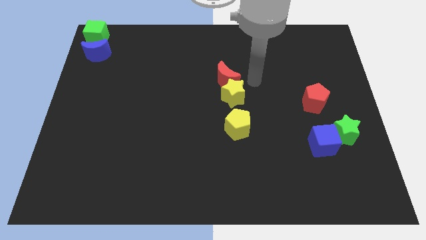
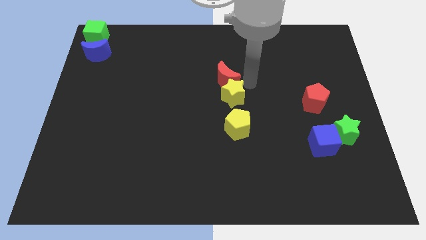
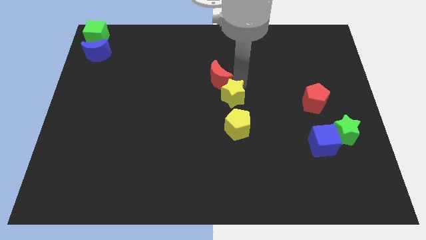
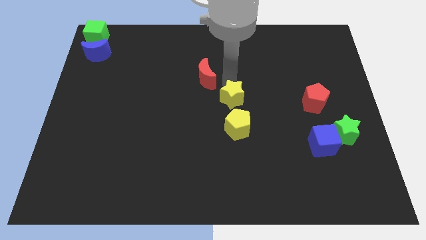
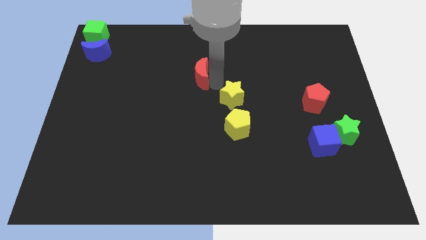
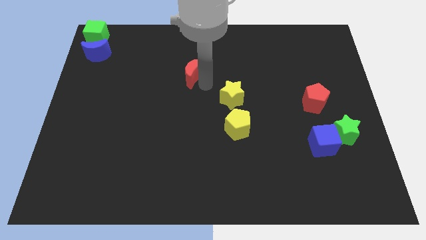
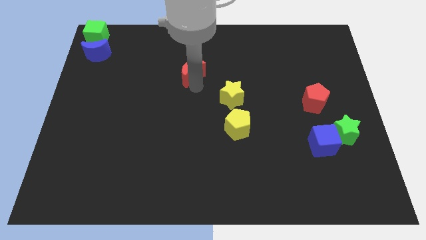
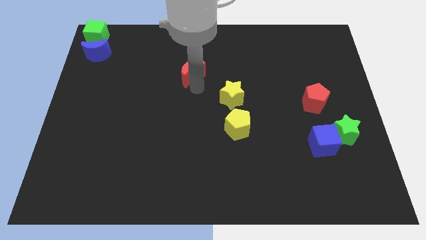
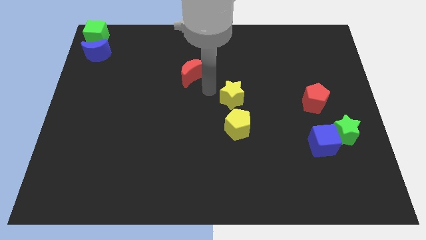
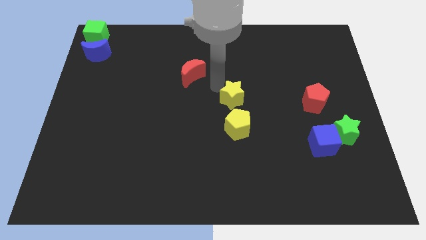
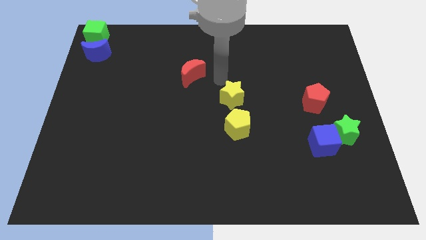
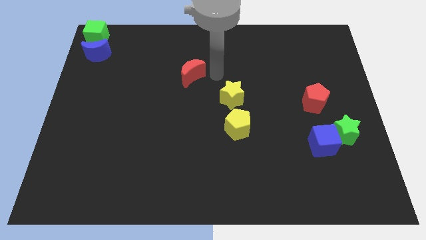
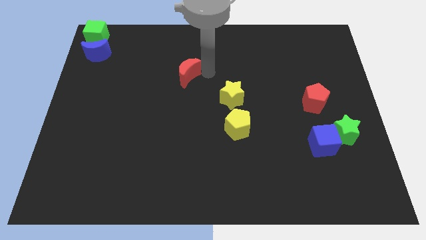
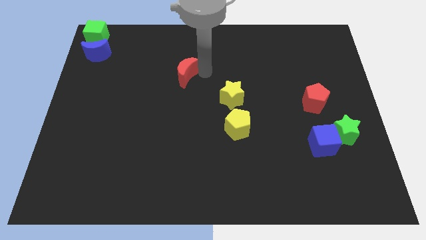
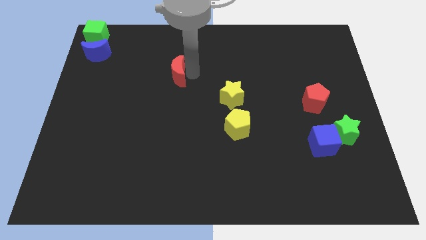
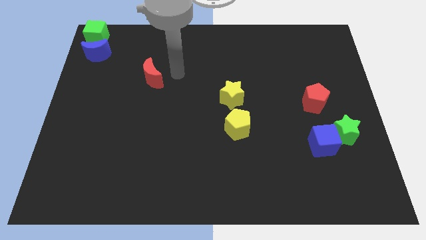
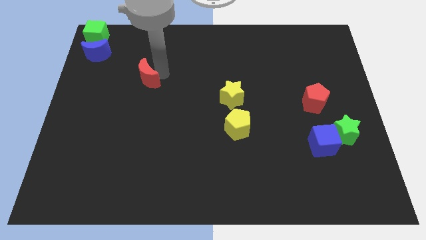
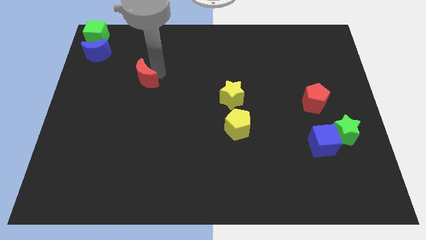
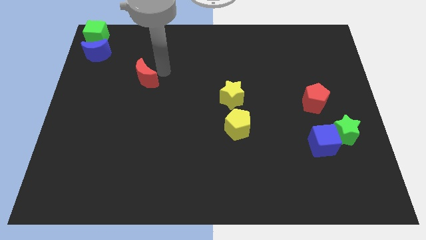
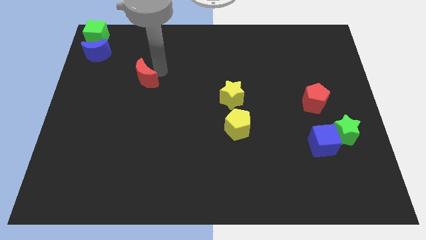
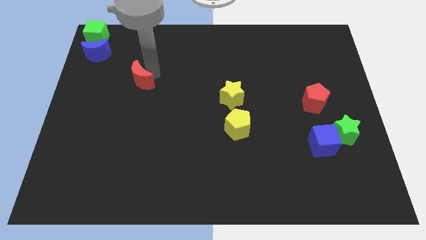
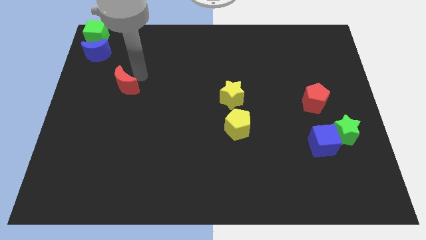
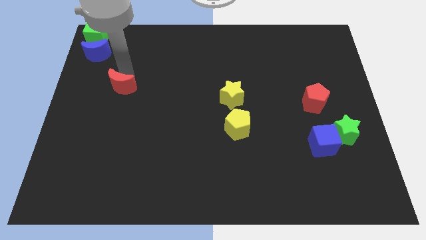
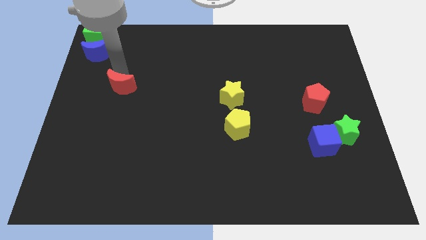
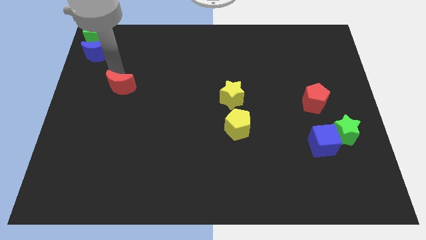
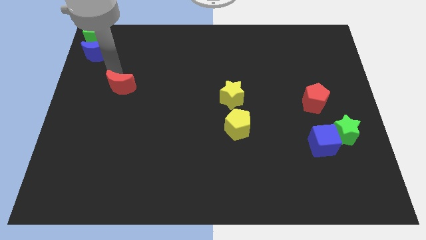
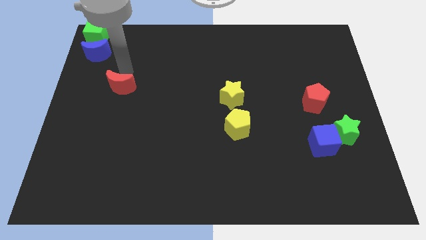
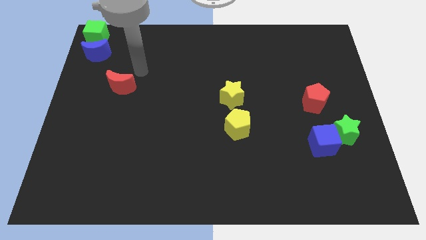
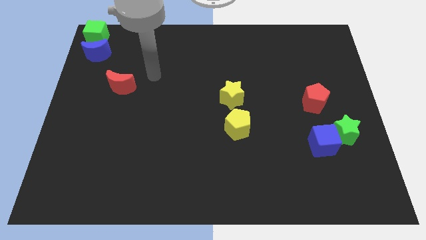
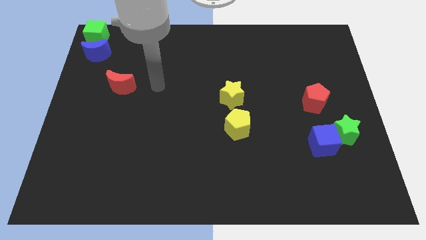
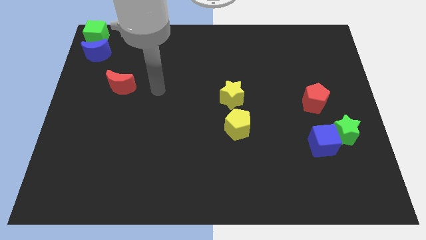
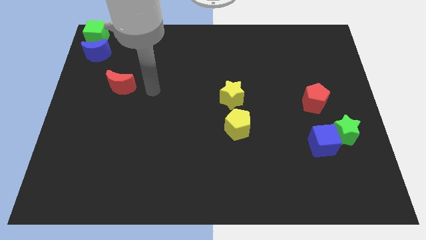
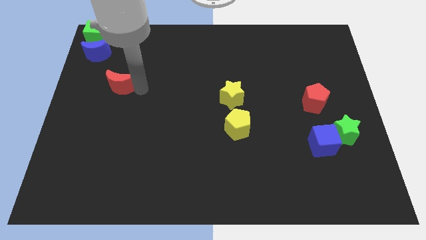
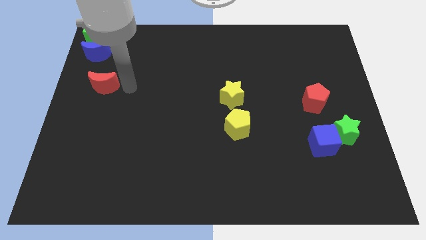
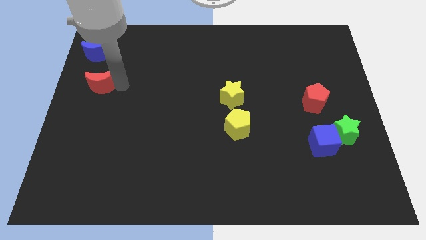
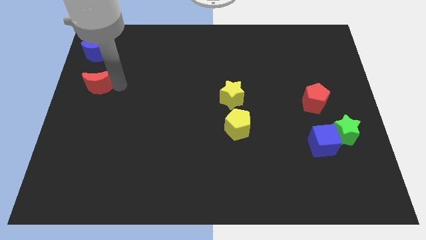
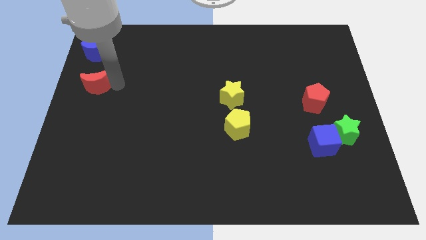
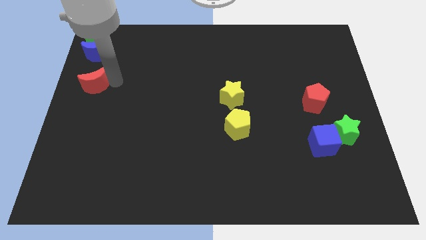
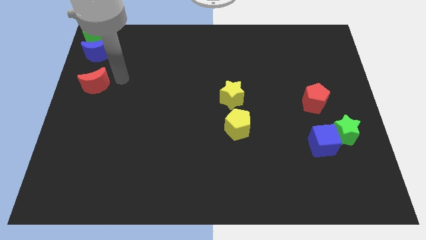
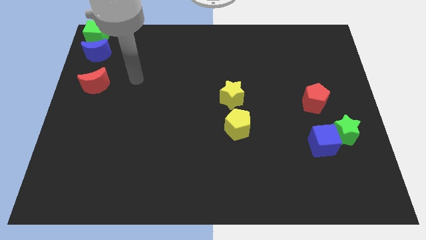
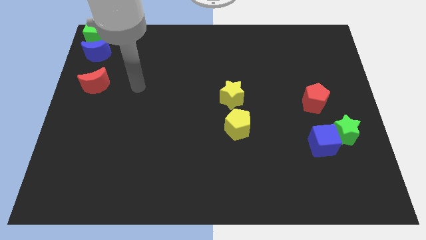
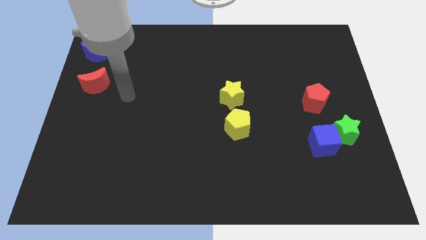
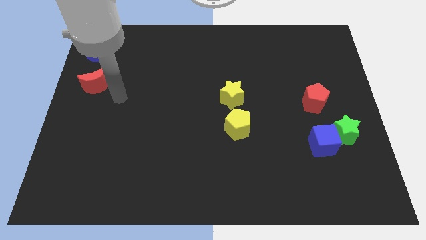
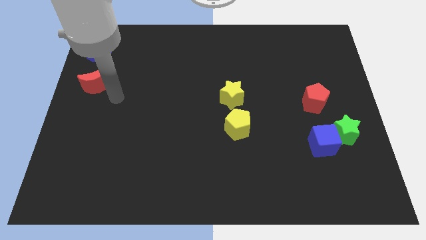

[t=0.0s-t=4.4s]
separate red moon from the yellow star

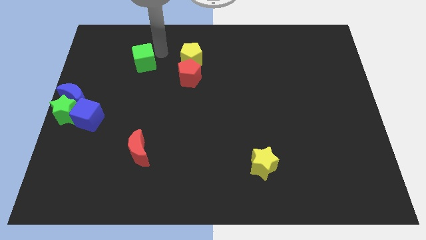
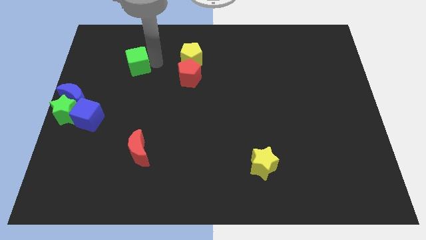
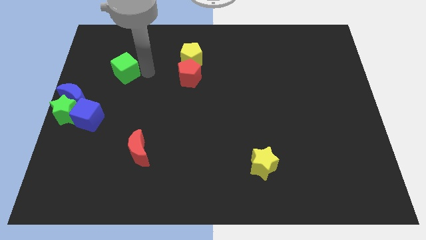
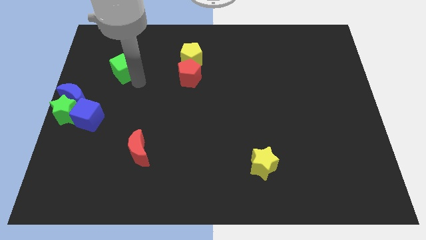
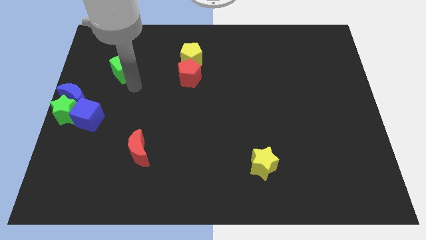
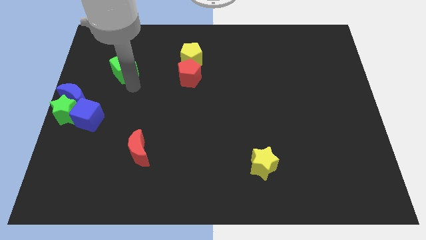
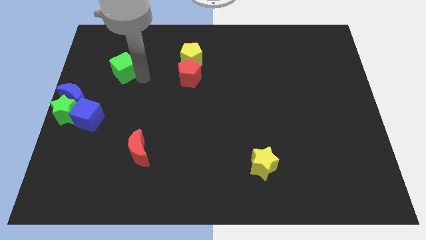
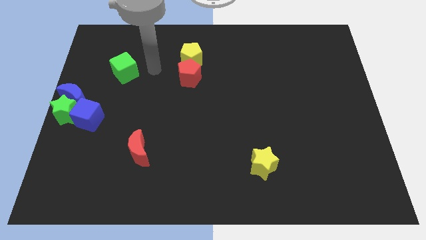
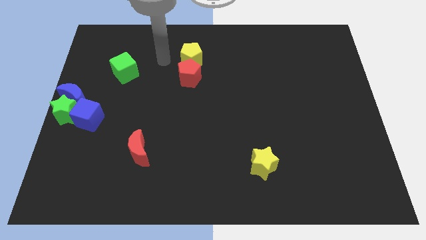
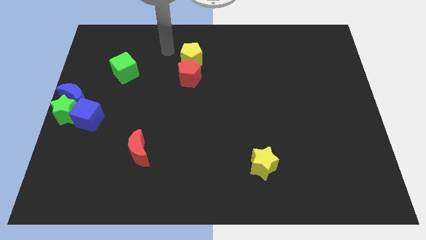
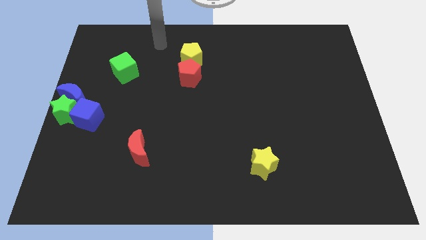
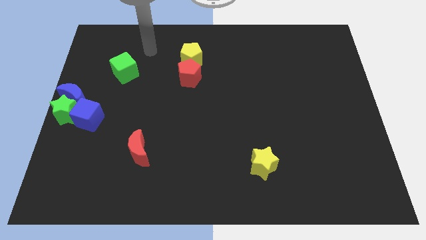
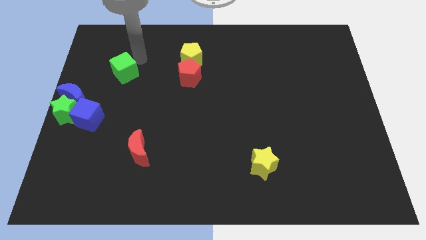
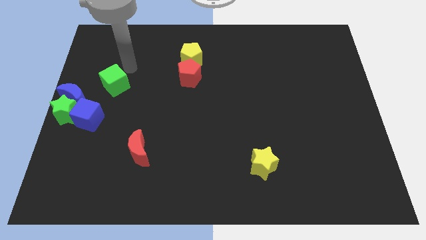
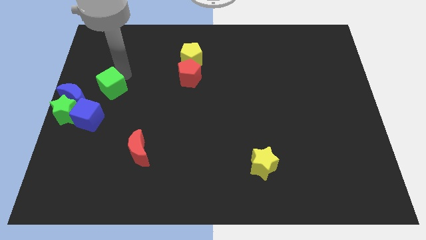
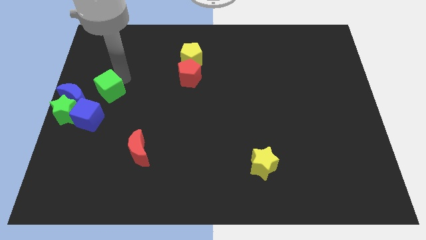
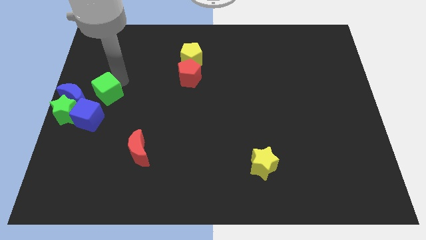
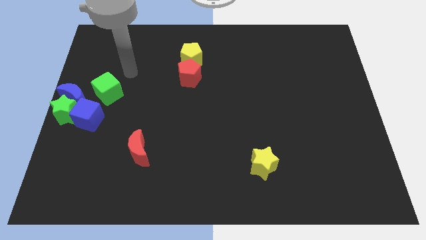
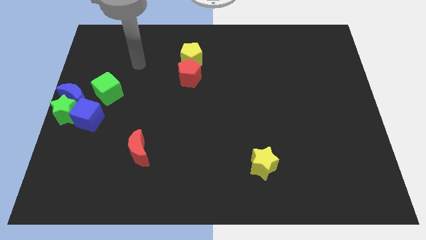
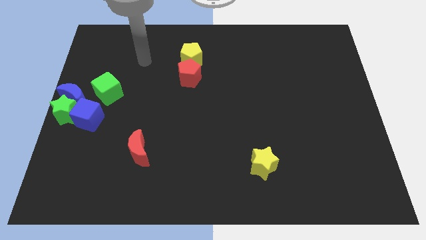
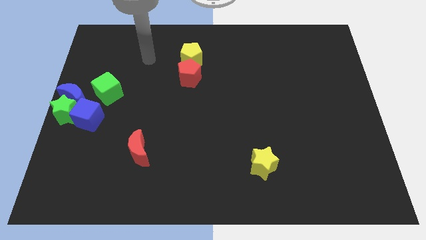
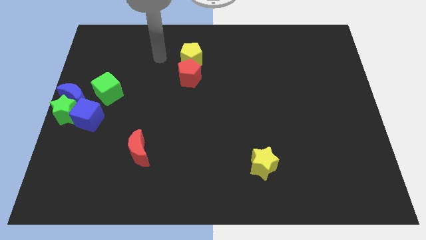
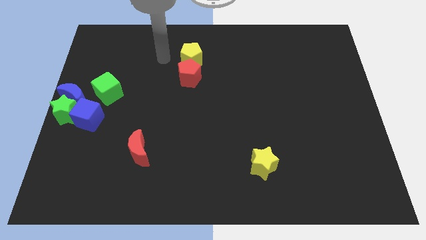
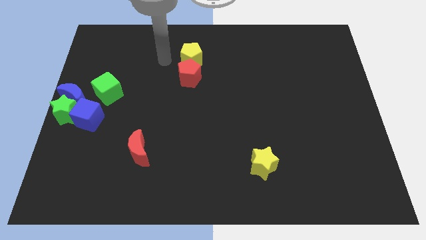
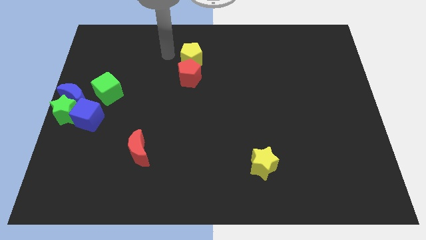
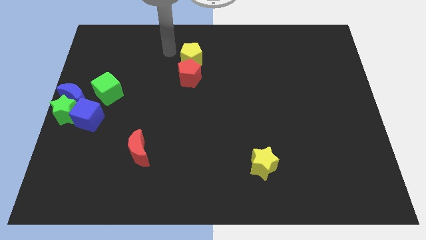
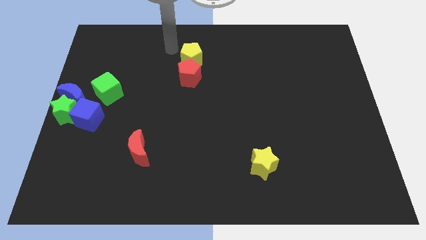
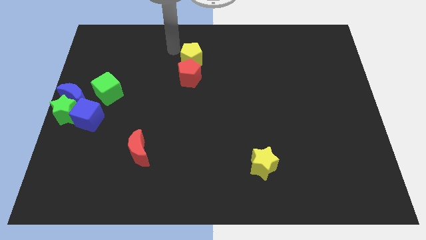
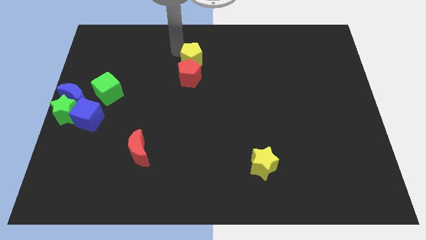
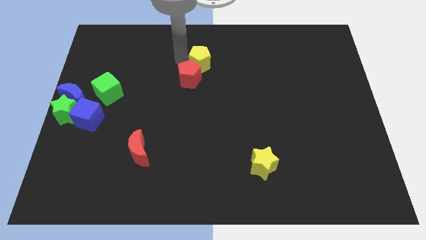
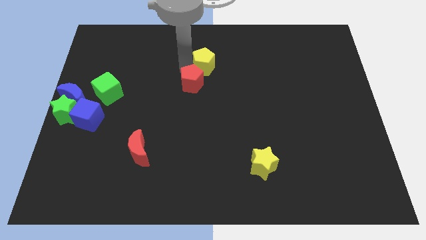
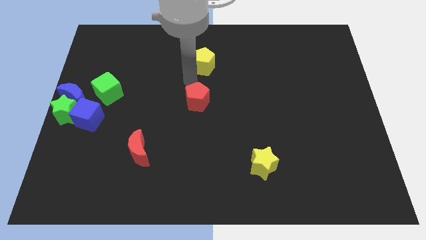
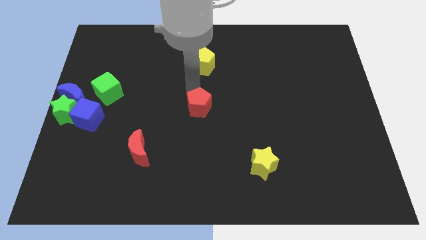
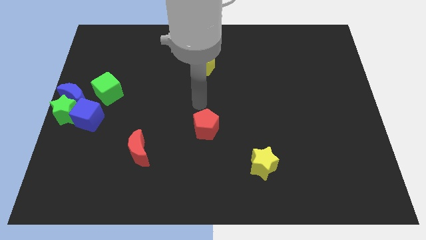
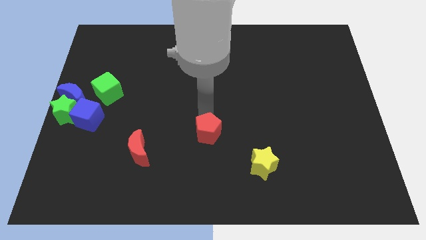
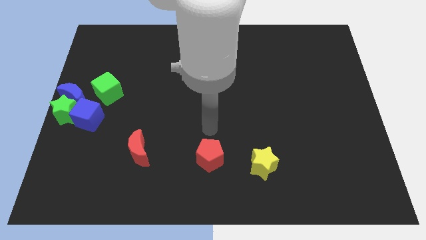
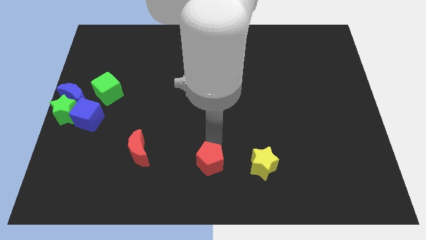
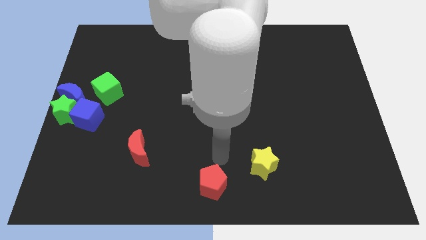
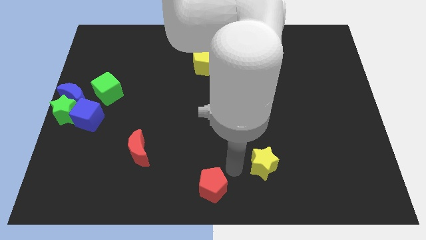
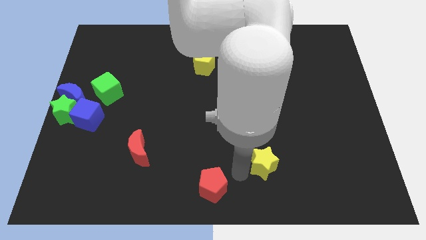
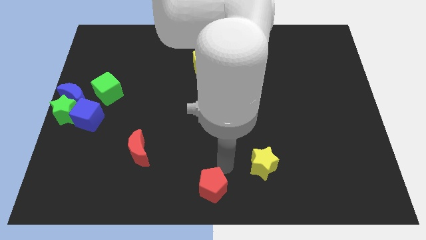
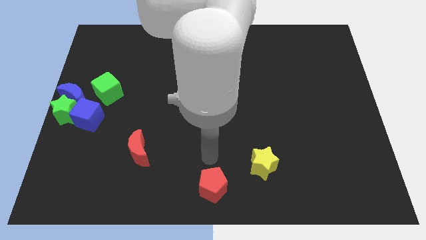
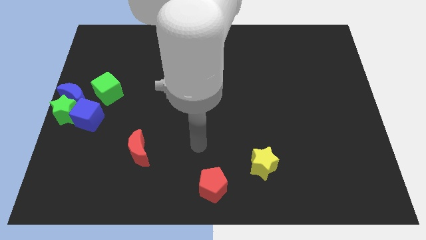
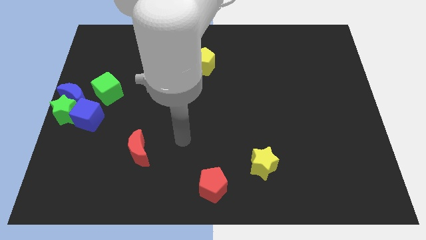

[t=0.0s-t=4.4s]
move red pentagon to the bottom centre of the board
